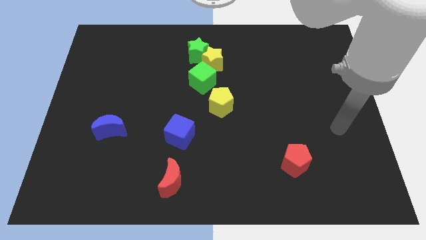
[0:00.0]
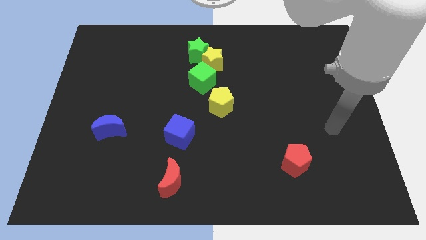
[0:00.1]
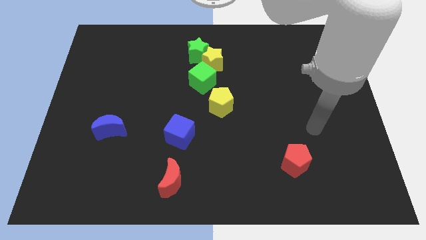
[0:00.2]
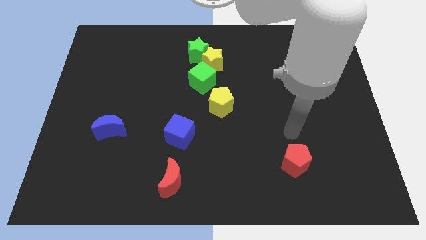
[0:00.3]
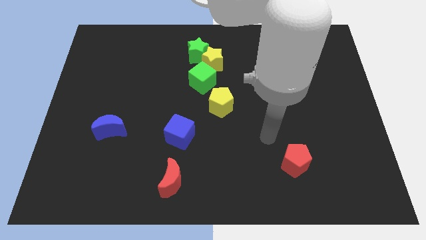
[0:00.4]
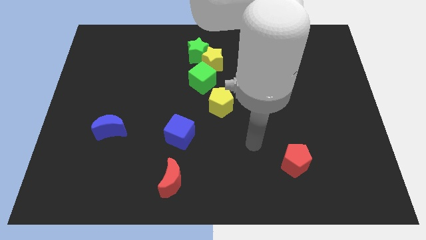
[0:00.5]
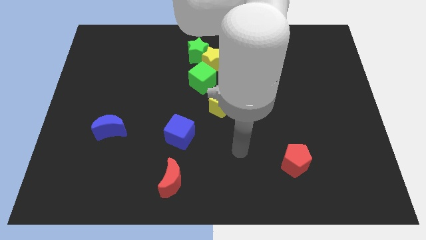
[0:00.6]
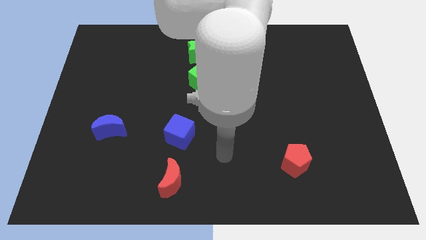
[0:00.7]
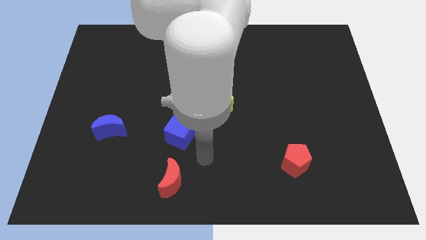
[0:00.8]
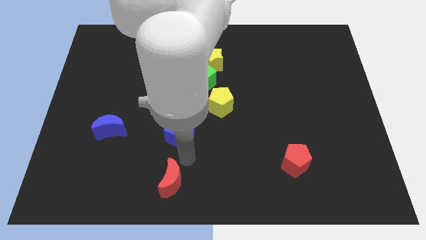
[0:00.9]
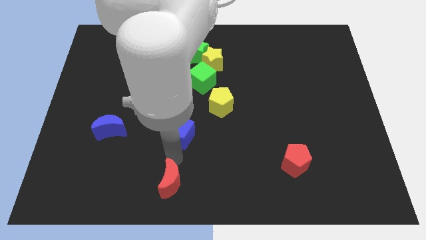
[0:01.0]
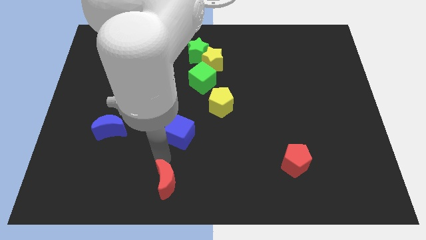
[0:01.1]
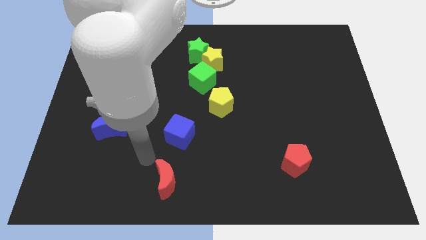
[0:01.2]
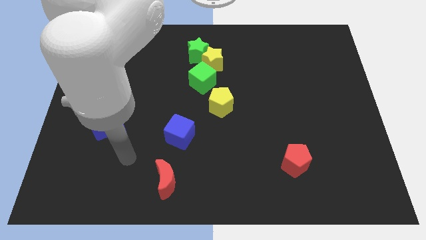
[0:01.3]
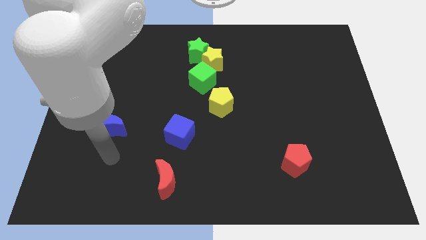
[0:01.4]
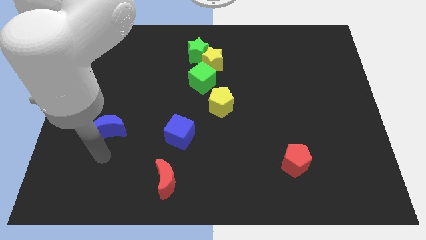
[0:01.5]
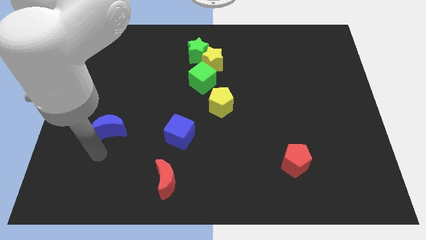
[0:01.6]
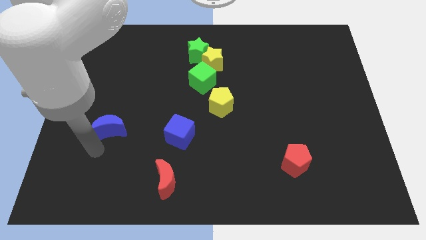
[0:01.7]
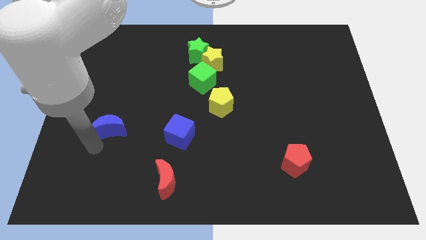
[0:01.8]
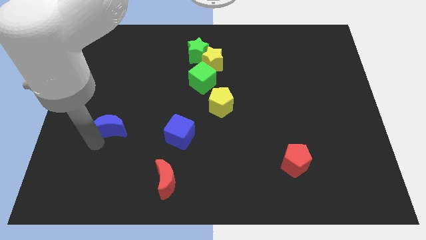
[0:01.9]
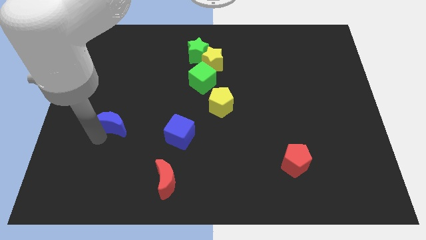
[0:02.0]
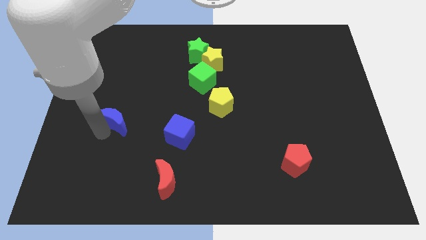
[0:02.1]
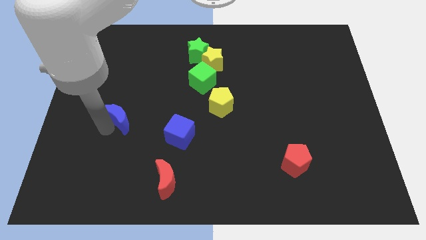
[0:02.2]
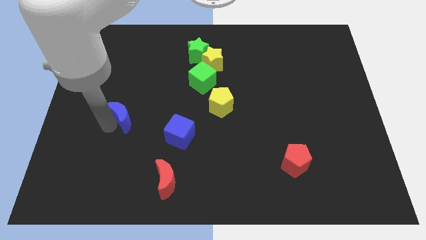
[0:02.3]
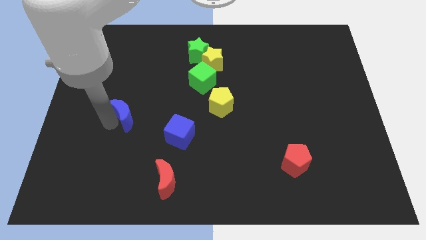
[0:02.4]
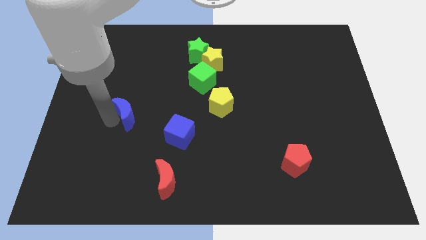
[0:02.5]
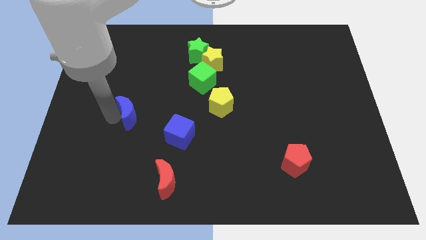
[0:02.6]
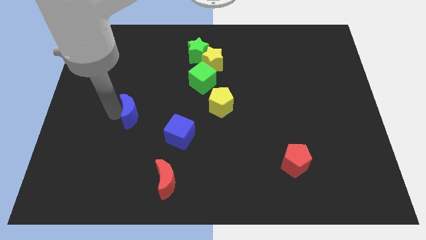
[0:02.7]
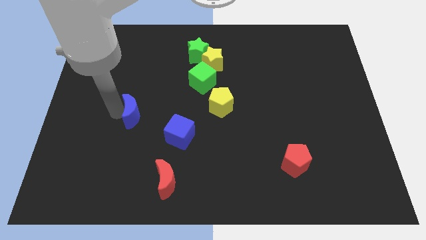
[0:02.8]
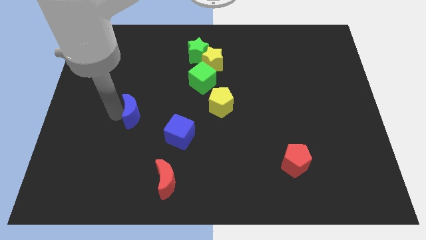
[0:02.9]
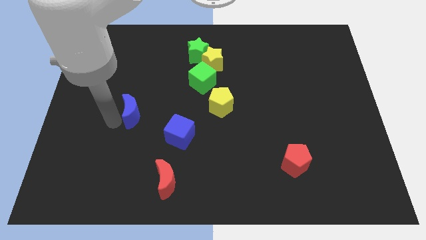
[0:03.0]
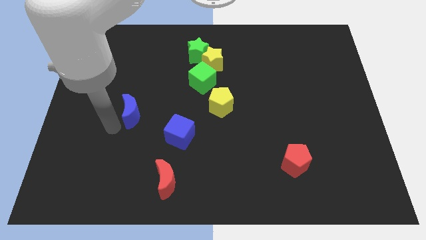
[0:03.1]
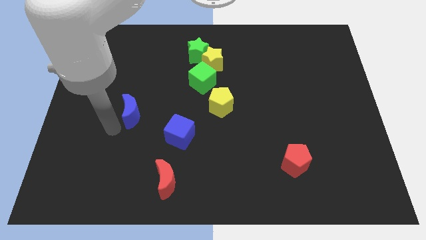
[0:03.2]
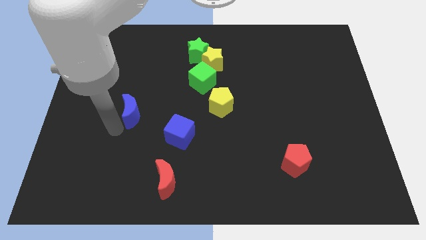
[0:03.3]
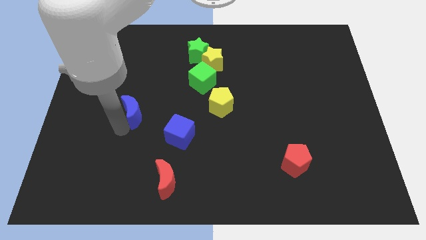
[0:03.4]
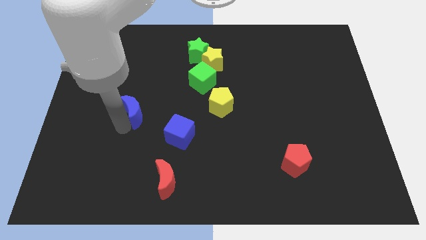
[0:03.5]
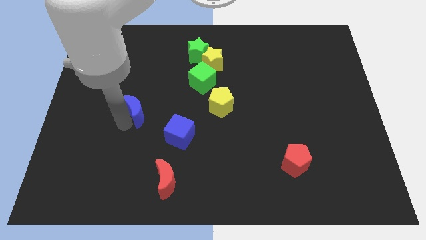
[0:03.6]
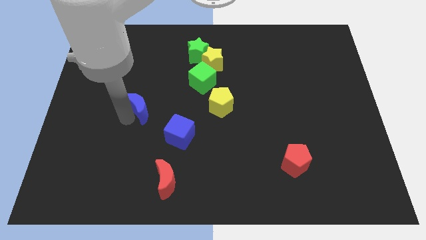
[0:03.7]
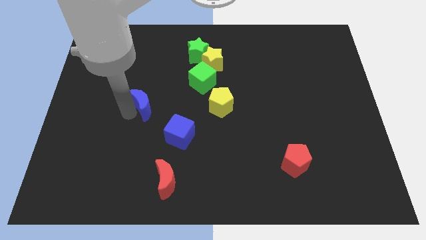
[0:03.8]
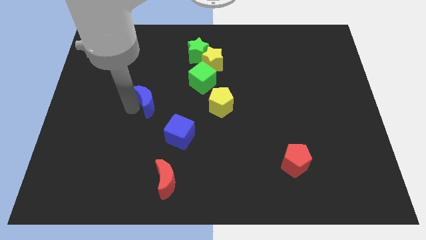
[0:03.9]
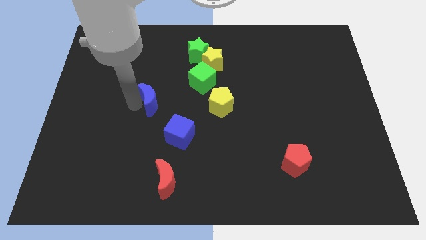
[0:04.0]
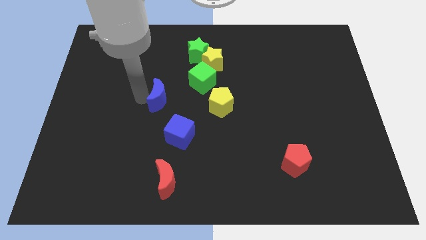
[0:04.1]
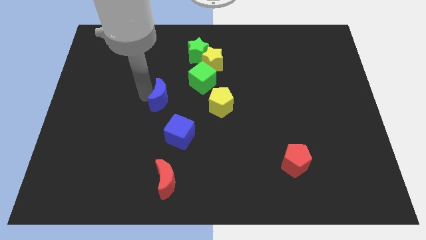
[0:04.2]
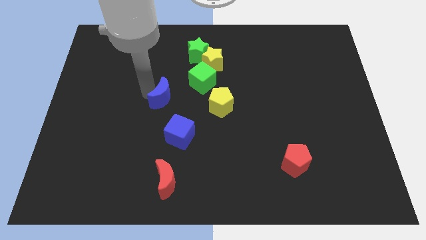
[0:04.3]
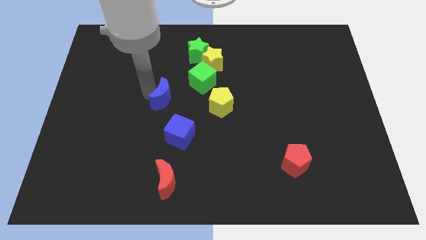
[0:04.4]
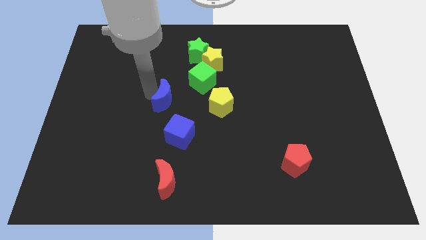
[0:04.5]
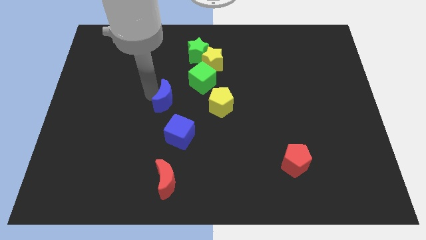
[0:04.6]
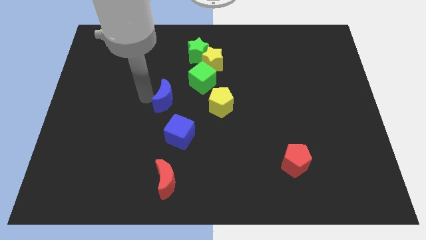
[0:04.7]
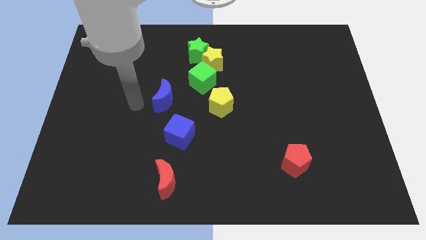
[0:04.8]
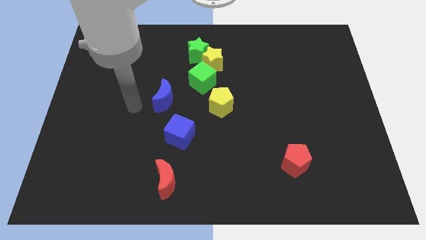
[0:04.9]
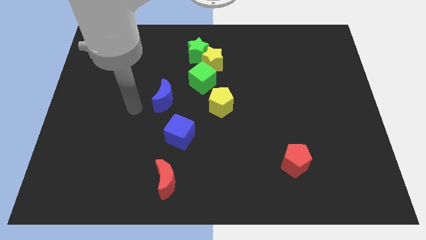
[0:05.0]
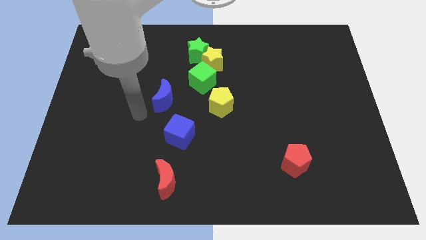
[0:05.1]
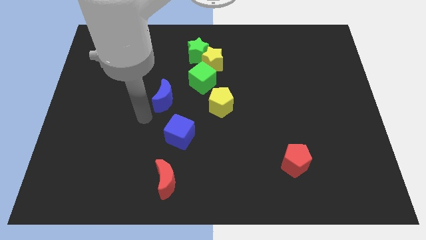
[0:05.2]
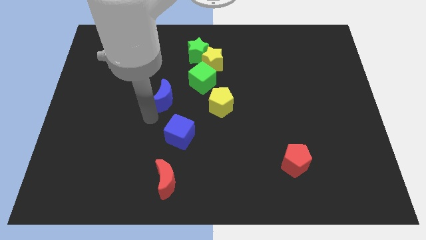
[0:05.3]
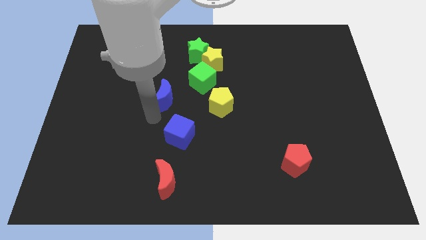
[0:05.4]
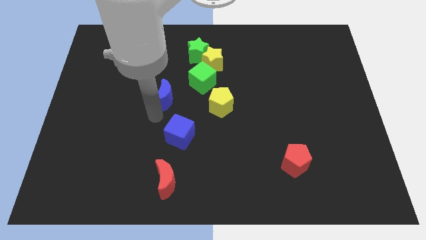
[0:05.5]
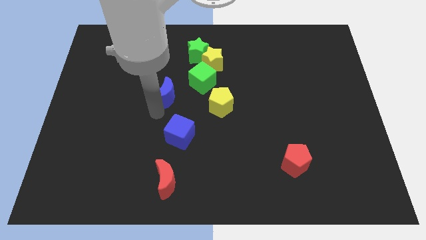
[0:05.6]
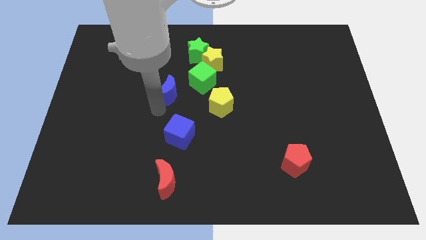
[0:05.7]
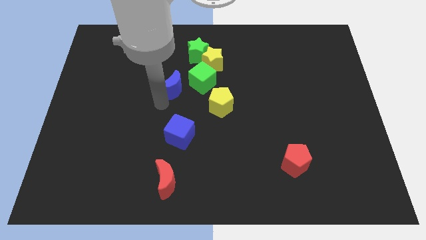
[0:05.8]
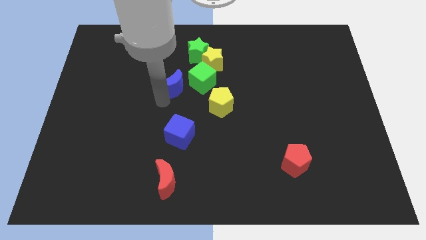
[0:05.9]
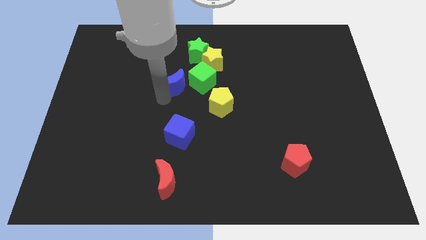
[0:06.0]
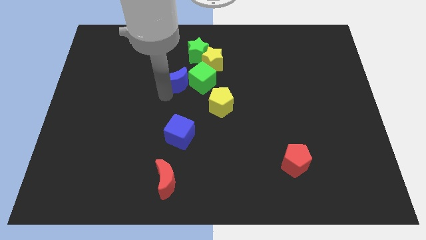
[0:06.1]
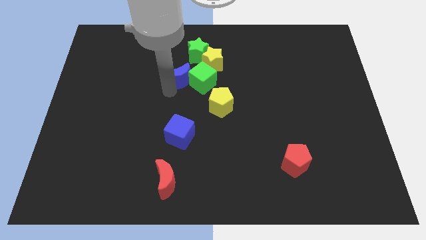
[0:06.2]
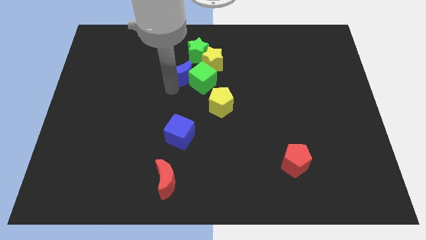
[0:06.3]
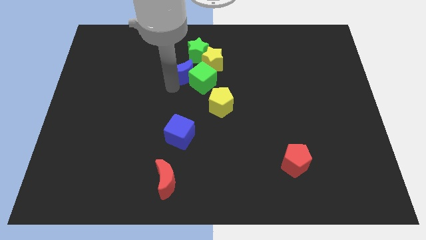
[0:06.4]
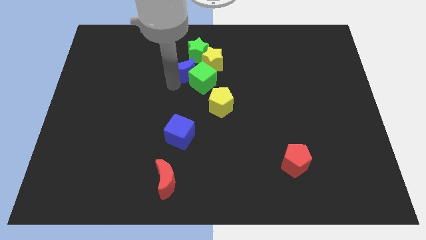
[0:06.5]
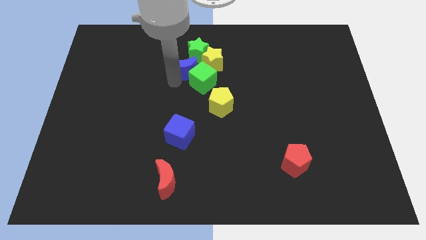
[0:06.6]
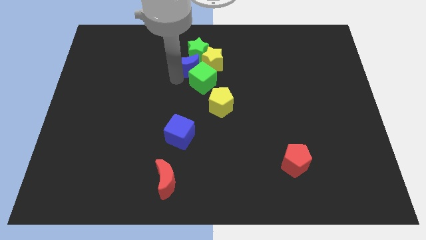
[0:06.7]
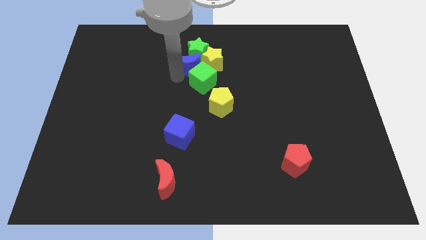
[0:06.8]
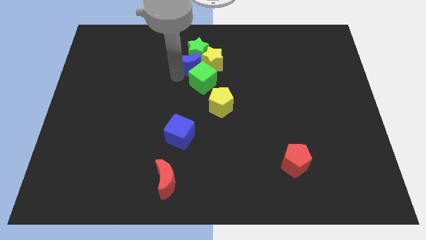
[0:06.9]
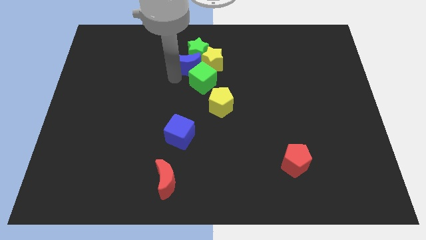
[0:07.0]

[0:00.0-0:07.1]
slide the blue moon close to the yellow star

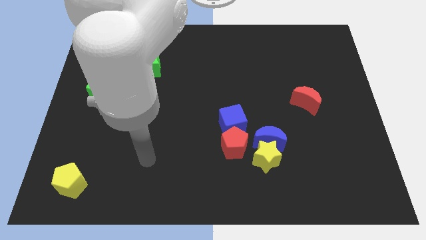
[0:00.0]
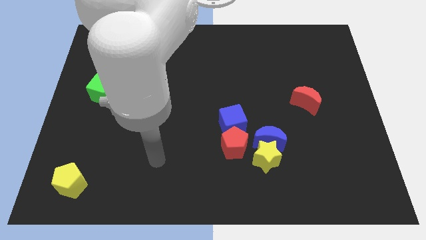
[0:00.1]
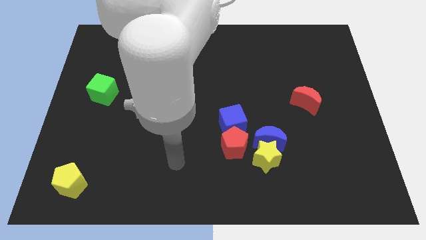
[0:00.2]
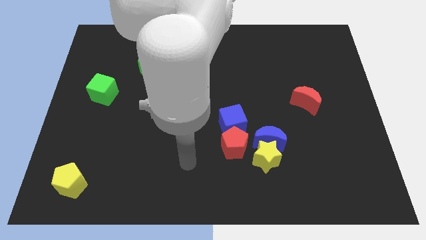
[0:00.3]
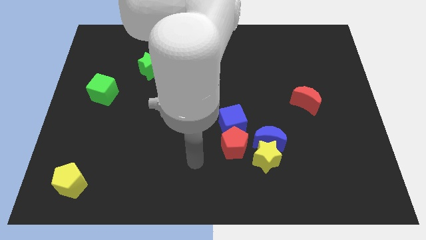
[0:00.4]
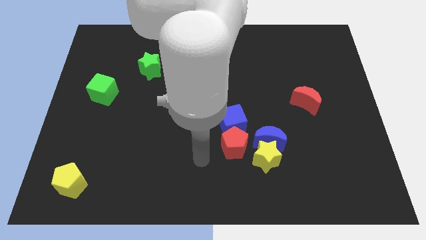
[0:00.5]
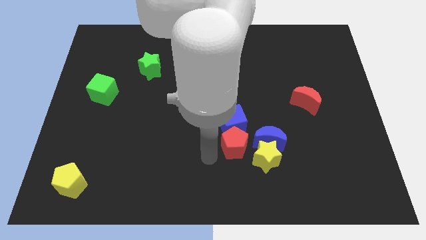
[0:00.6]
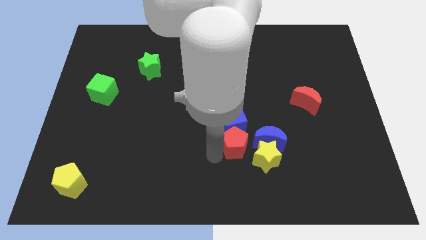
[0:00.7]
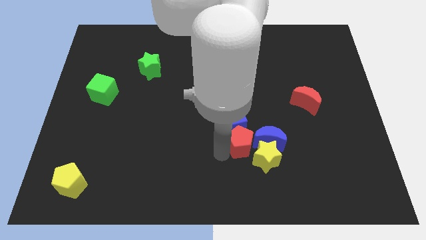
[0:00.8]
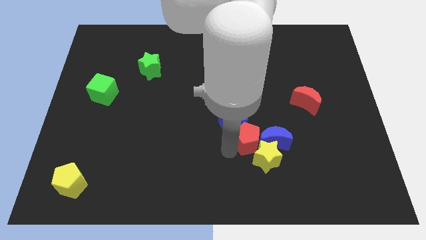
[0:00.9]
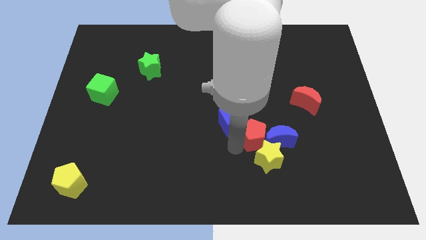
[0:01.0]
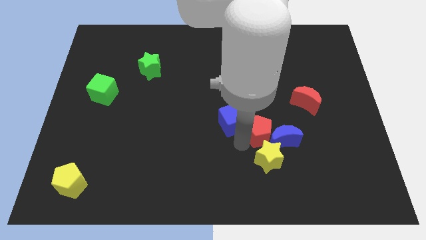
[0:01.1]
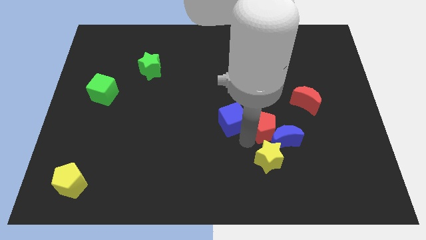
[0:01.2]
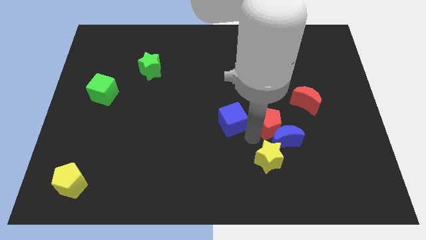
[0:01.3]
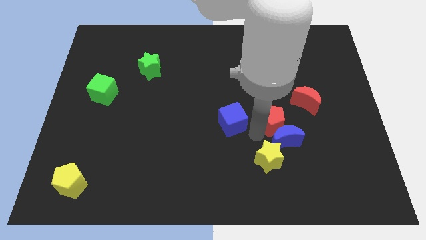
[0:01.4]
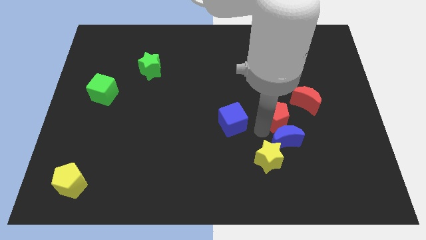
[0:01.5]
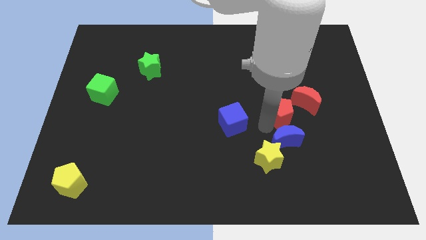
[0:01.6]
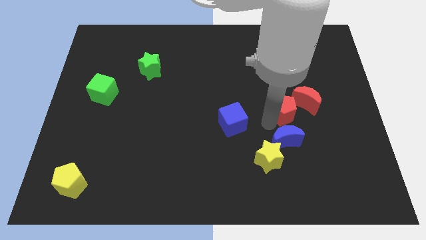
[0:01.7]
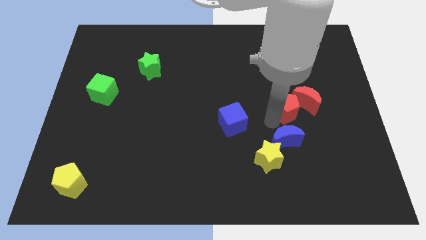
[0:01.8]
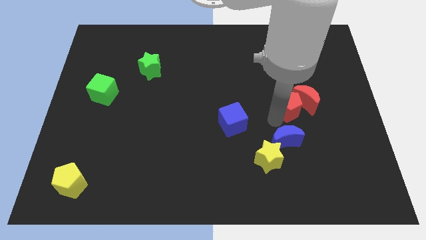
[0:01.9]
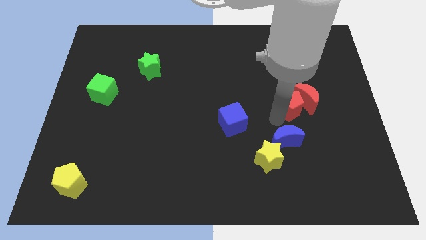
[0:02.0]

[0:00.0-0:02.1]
move the red pentagon next to the red moon
